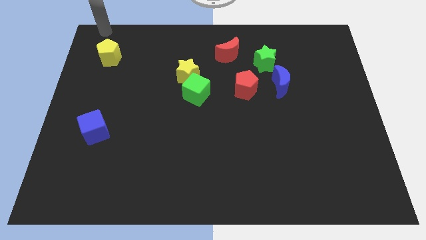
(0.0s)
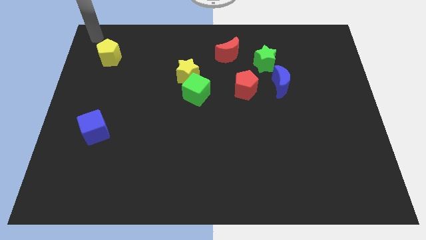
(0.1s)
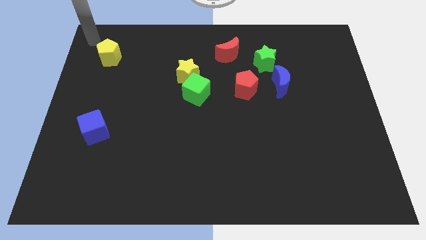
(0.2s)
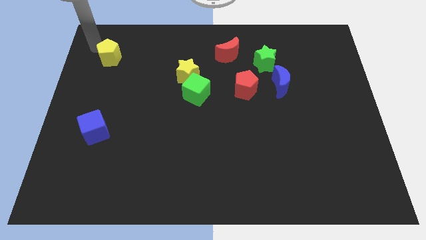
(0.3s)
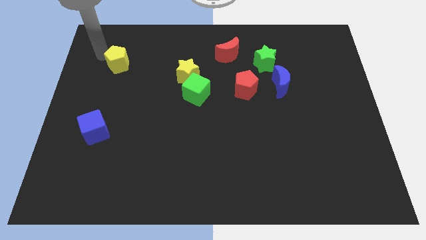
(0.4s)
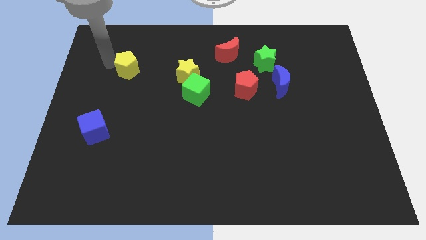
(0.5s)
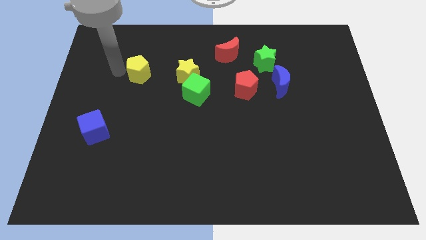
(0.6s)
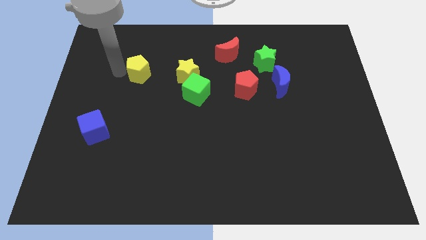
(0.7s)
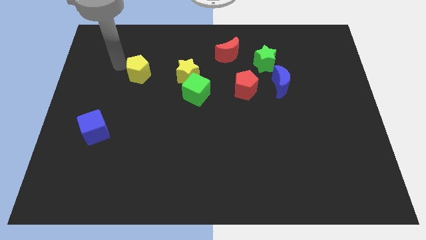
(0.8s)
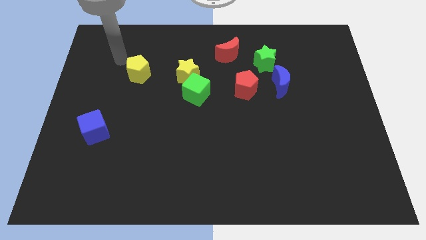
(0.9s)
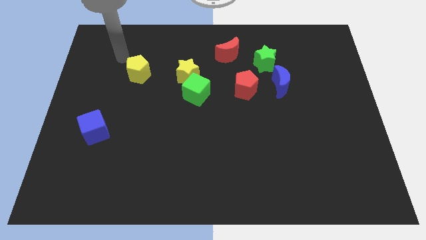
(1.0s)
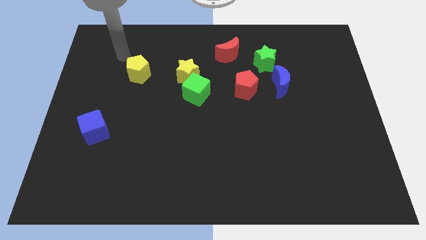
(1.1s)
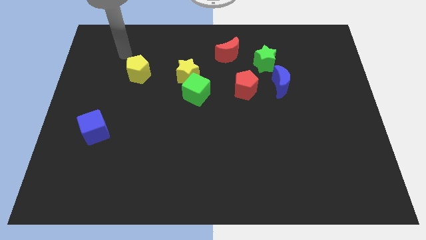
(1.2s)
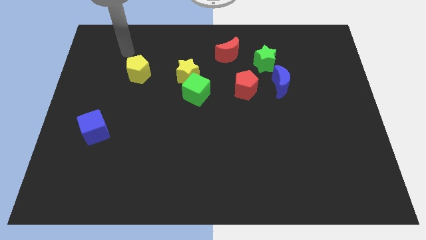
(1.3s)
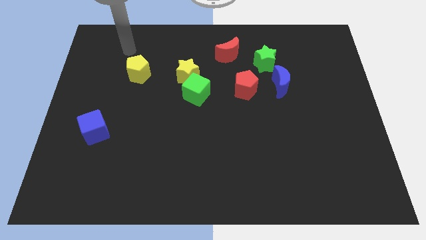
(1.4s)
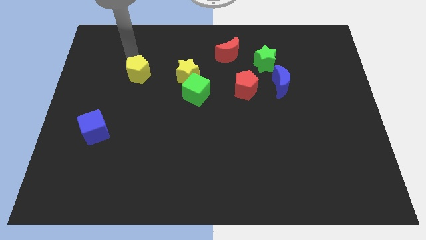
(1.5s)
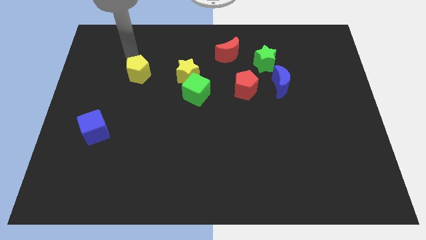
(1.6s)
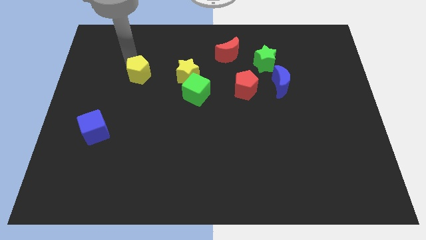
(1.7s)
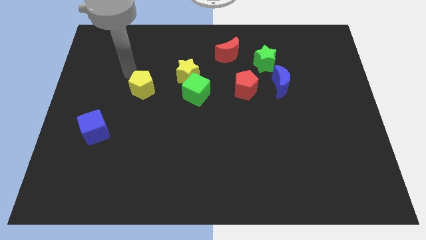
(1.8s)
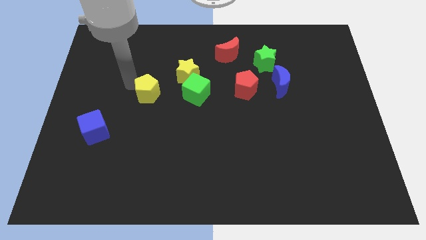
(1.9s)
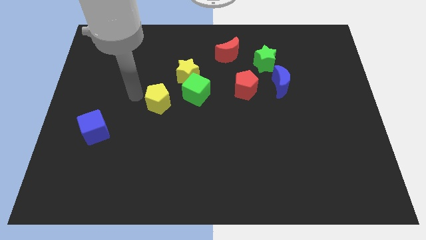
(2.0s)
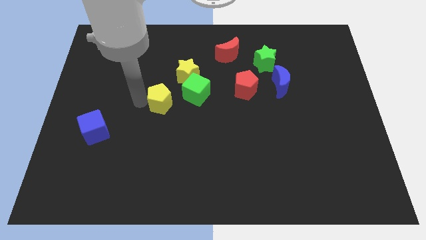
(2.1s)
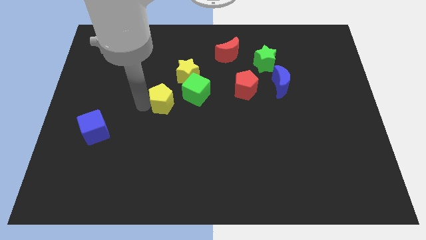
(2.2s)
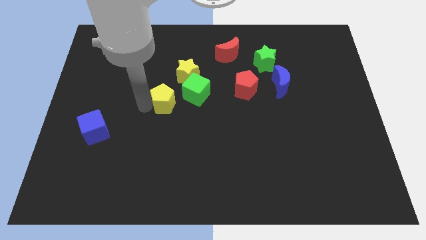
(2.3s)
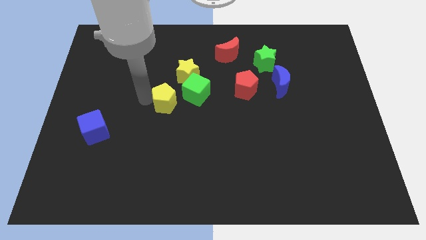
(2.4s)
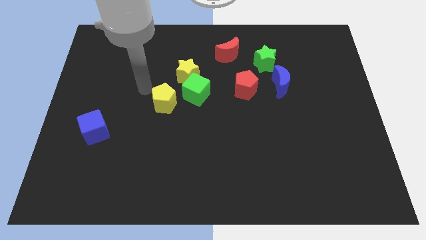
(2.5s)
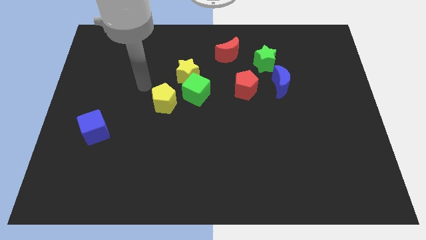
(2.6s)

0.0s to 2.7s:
move the yellow pentagon to the diagonal left of green cube

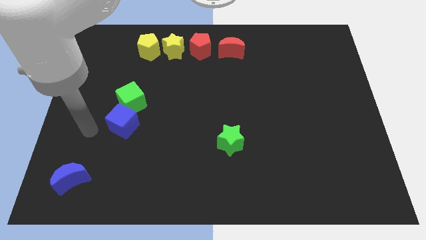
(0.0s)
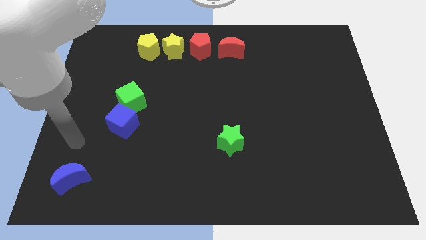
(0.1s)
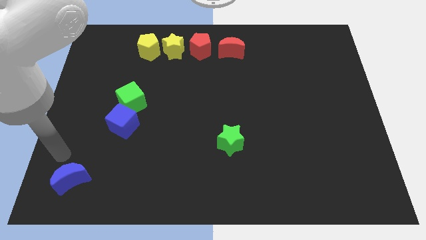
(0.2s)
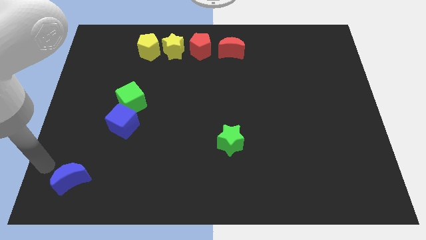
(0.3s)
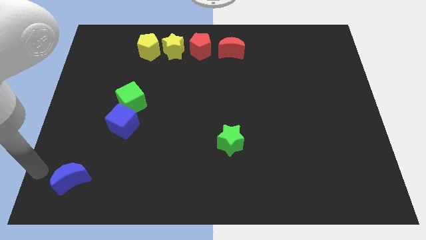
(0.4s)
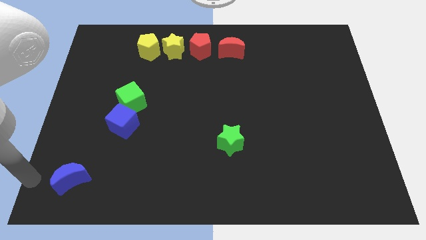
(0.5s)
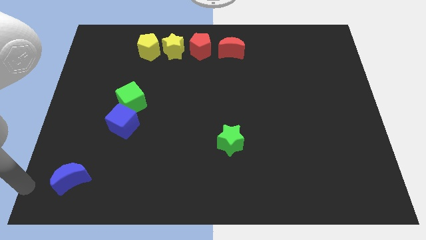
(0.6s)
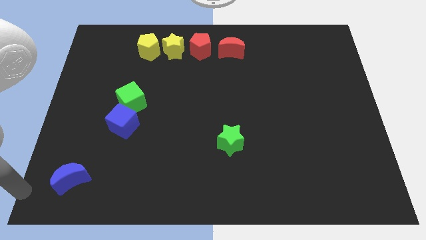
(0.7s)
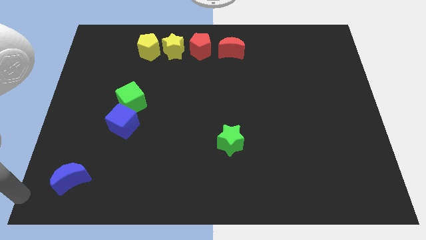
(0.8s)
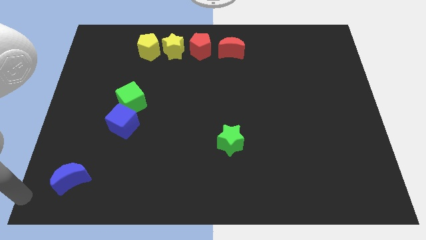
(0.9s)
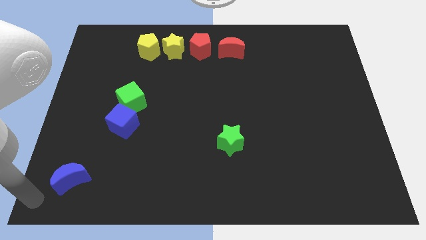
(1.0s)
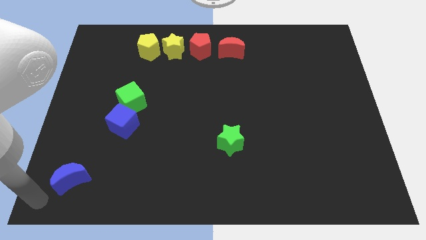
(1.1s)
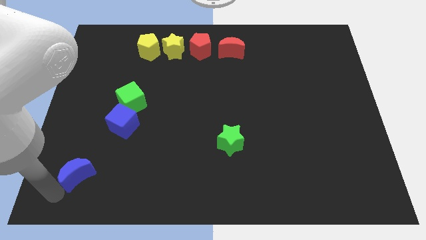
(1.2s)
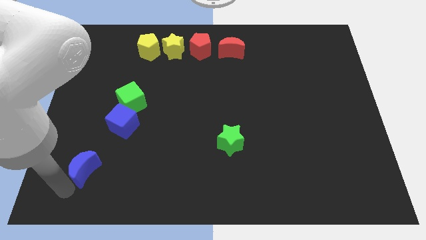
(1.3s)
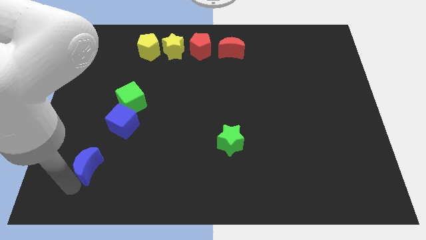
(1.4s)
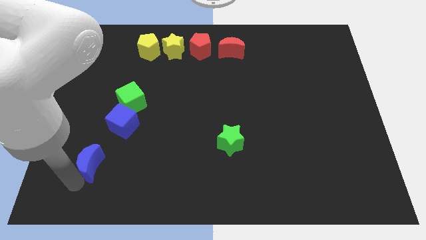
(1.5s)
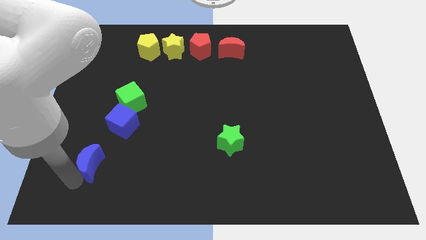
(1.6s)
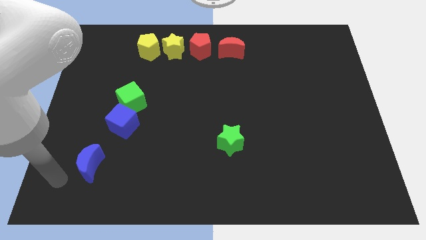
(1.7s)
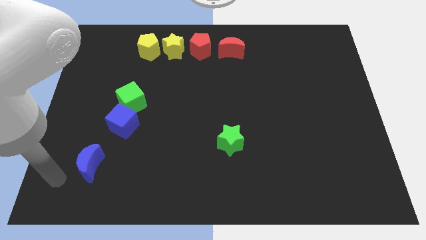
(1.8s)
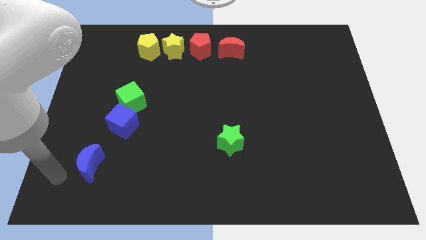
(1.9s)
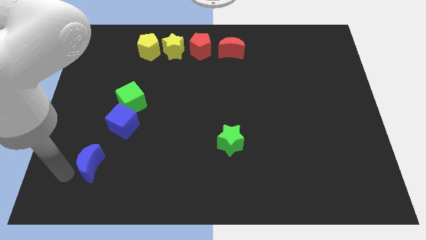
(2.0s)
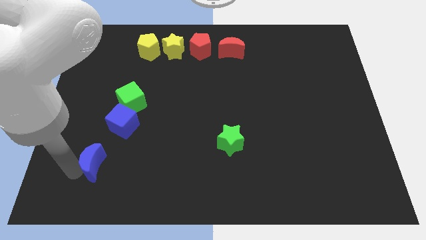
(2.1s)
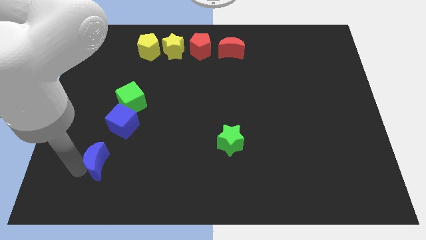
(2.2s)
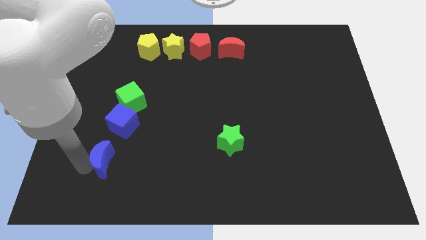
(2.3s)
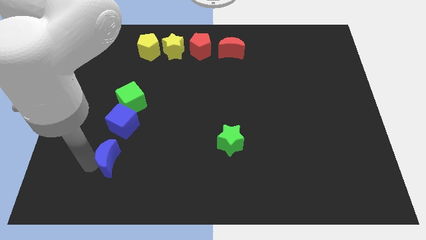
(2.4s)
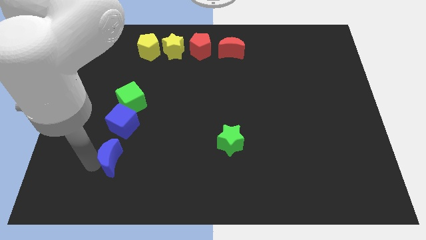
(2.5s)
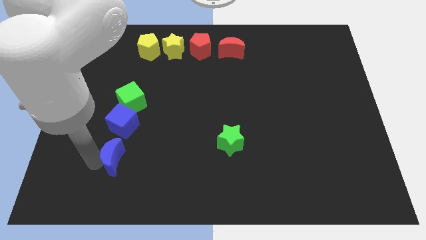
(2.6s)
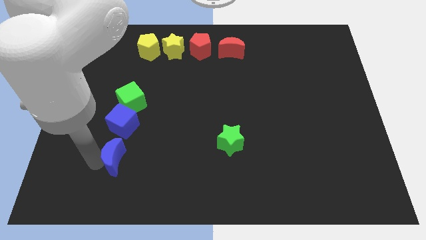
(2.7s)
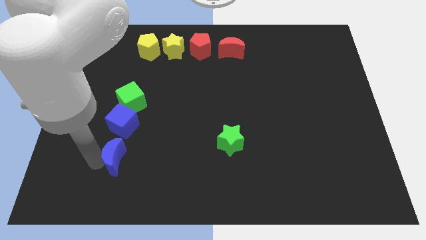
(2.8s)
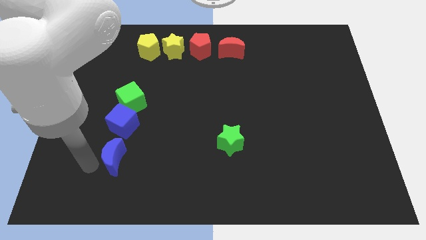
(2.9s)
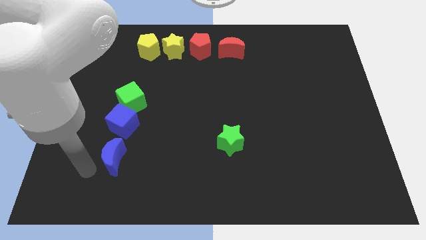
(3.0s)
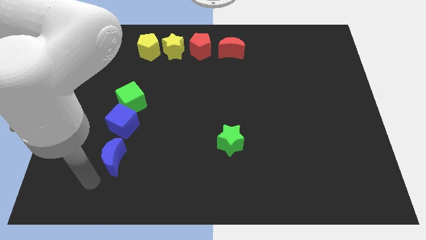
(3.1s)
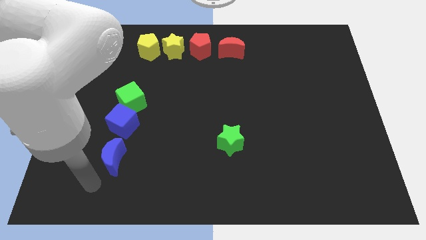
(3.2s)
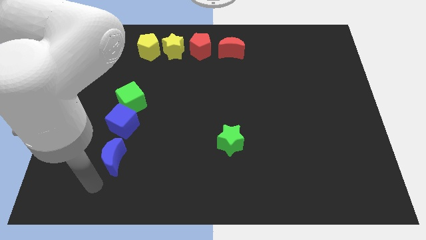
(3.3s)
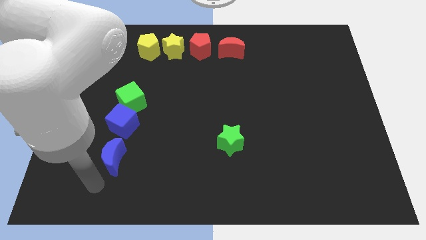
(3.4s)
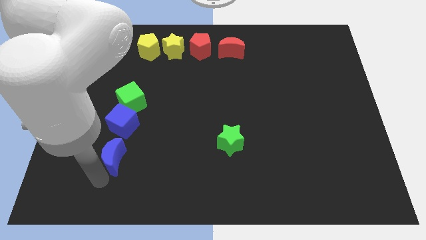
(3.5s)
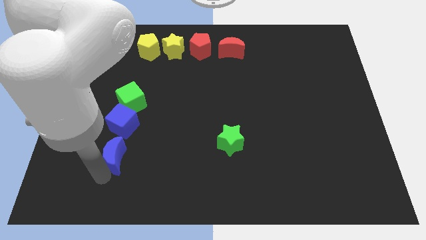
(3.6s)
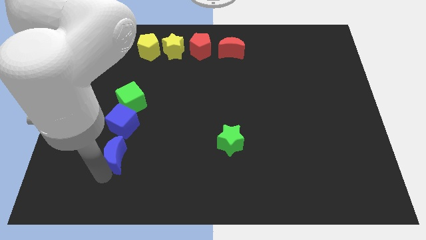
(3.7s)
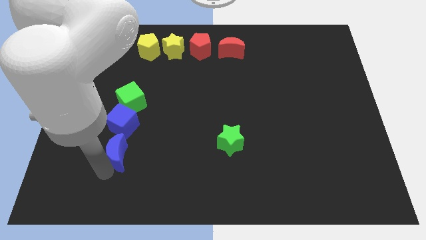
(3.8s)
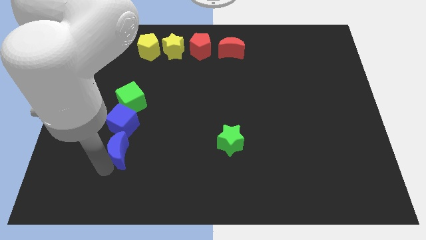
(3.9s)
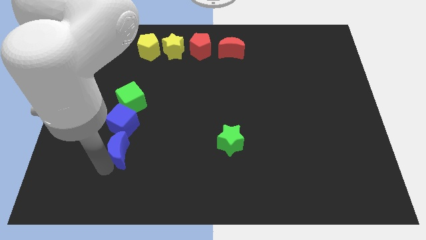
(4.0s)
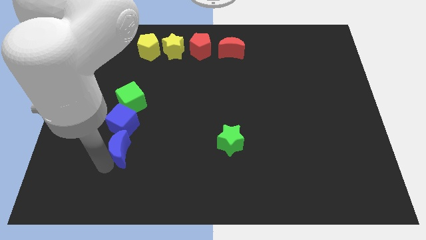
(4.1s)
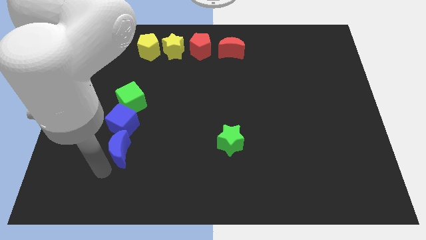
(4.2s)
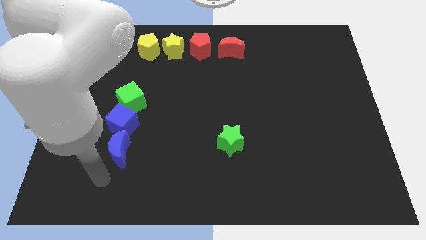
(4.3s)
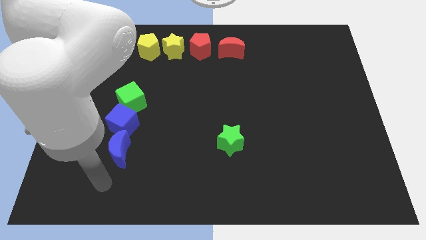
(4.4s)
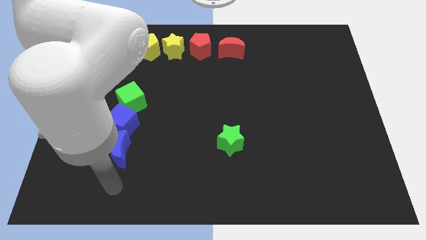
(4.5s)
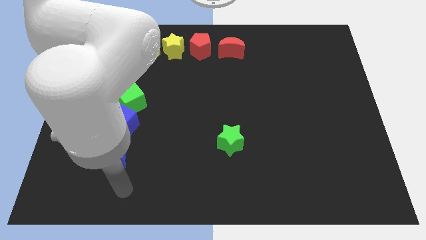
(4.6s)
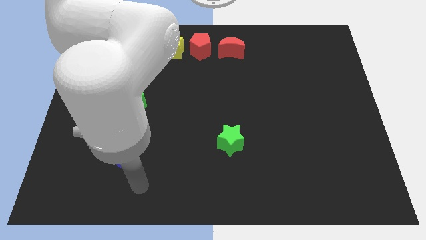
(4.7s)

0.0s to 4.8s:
place the blue crescent below the blue cube

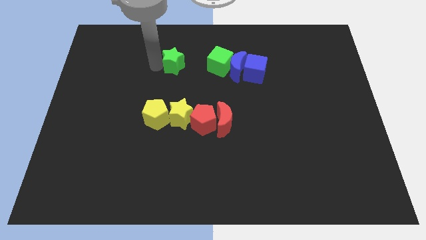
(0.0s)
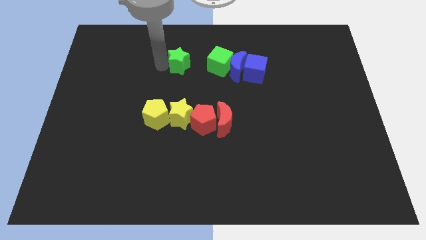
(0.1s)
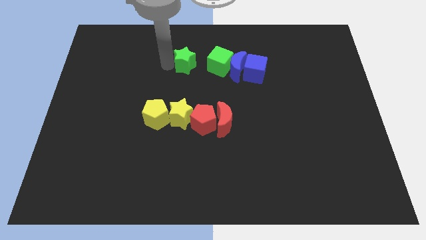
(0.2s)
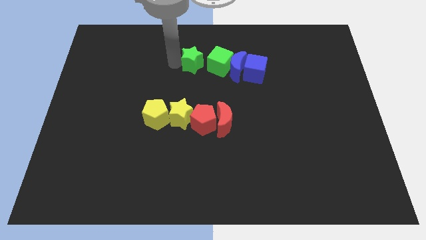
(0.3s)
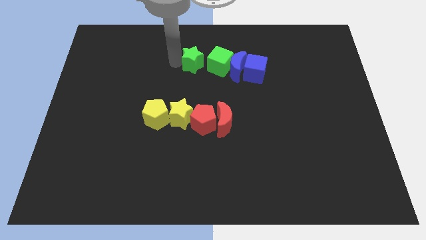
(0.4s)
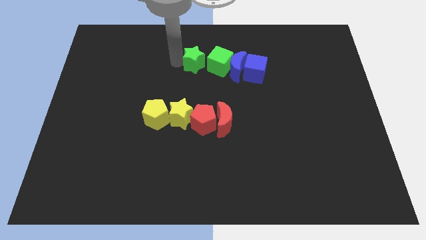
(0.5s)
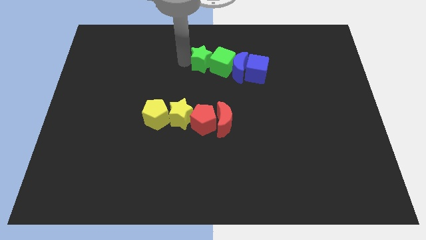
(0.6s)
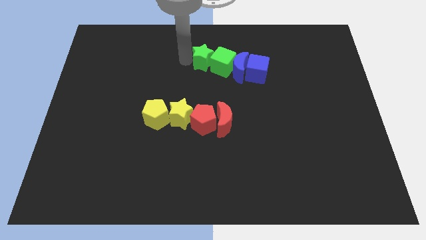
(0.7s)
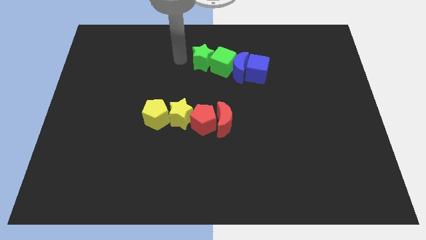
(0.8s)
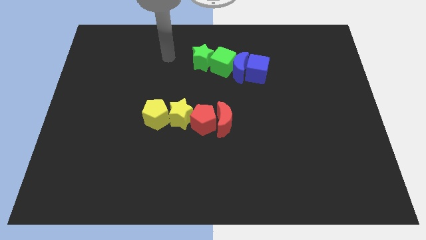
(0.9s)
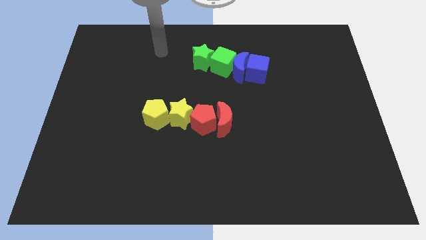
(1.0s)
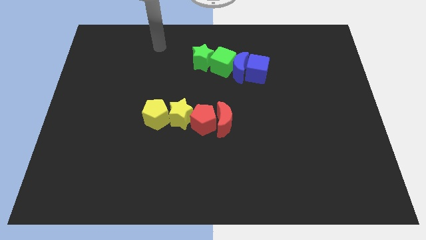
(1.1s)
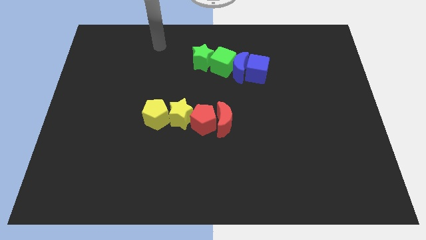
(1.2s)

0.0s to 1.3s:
move your arm away from green star

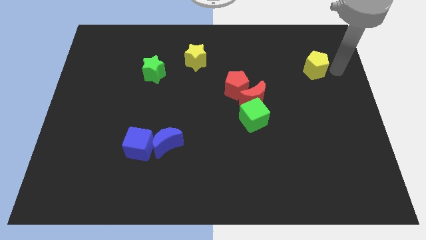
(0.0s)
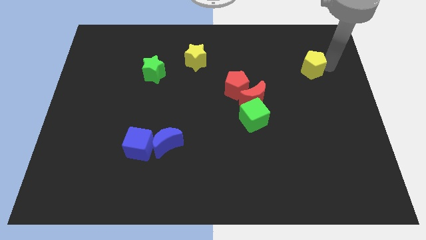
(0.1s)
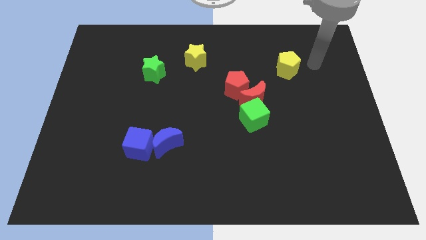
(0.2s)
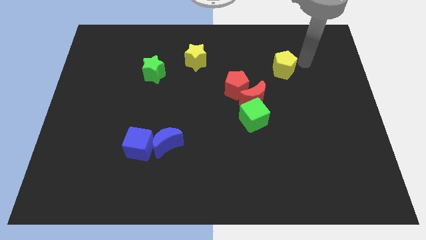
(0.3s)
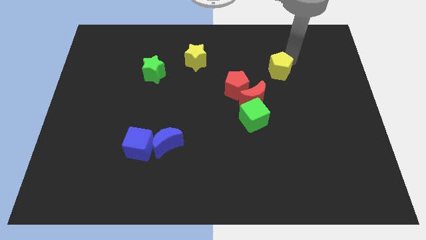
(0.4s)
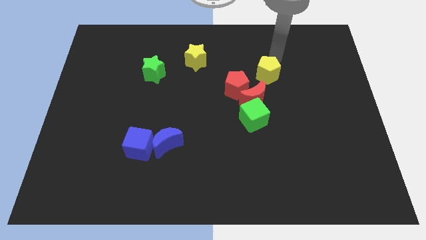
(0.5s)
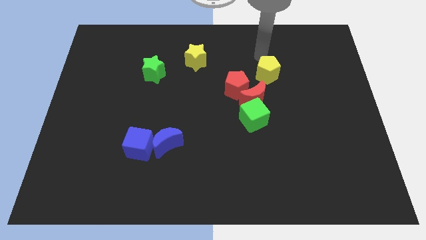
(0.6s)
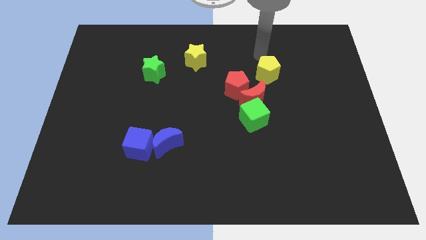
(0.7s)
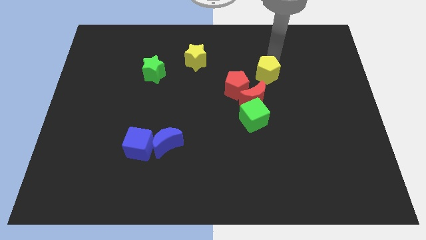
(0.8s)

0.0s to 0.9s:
move the yellow pentagon to the right of the red pentagon
